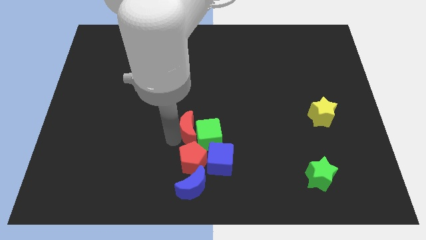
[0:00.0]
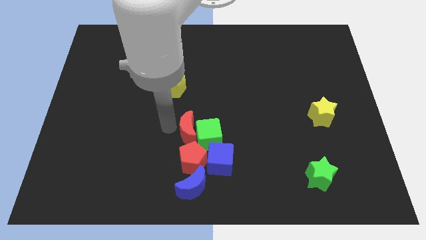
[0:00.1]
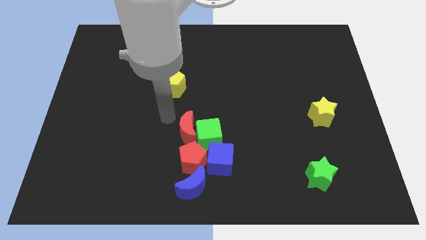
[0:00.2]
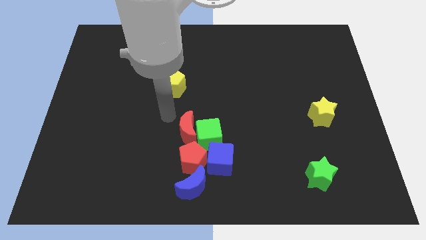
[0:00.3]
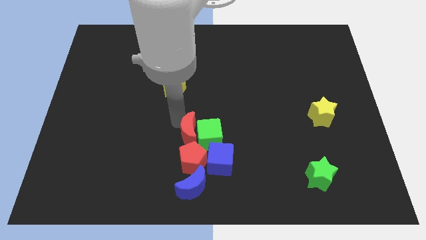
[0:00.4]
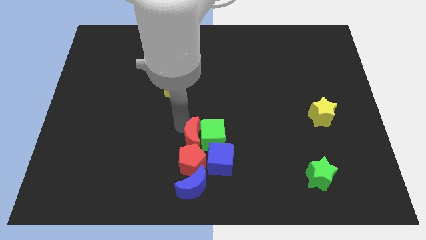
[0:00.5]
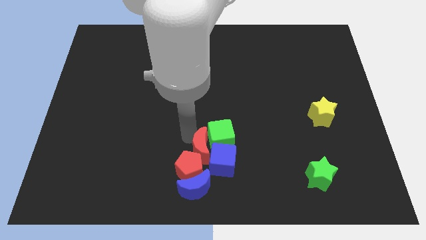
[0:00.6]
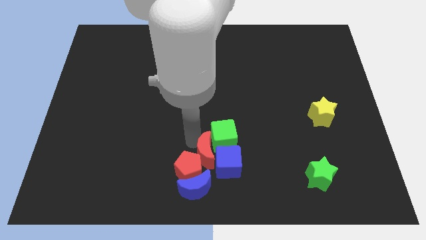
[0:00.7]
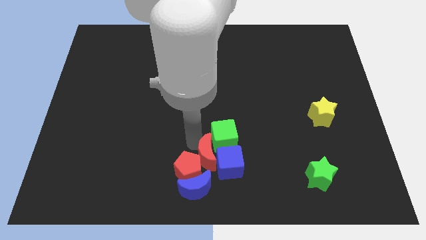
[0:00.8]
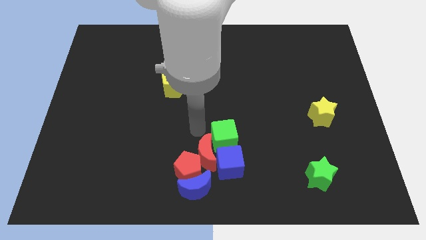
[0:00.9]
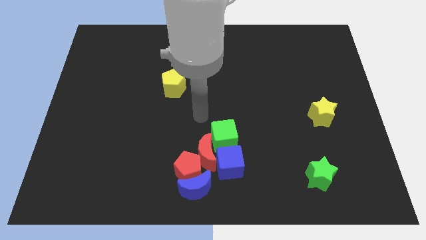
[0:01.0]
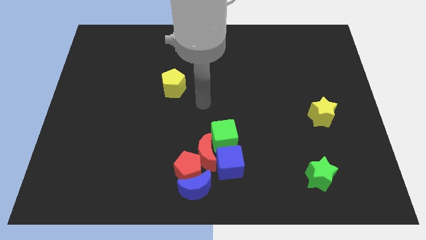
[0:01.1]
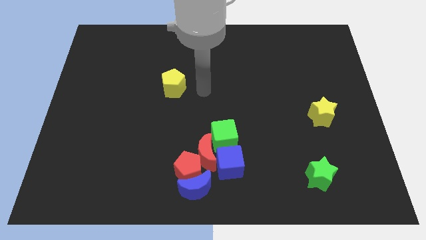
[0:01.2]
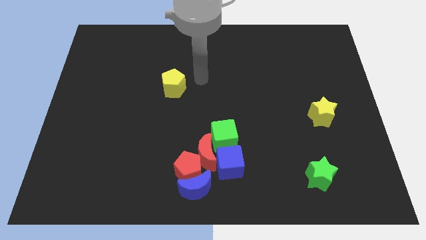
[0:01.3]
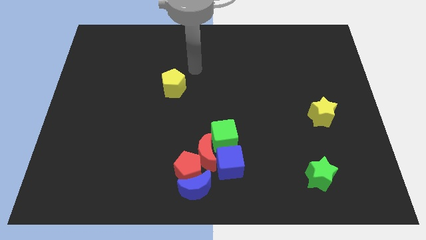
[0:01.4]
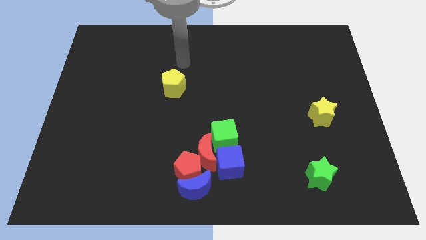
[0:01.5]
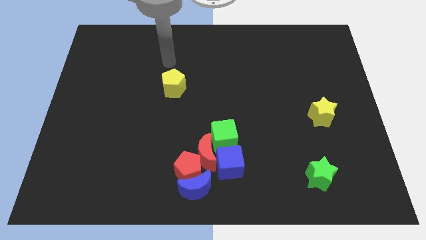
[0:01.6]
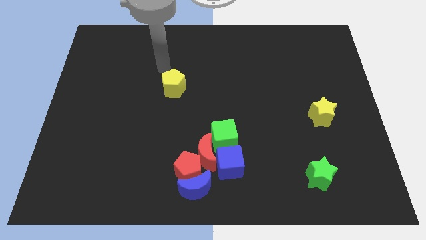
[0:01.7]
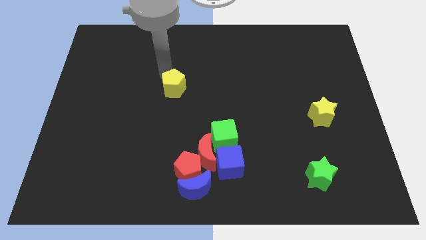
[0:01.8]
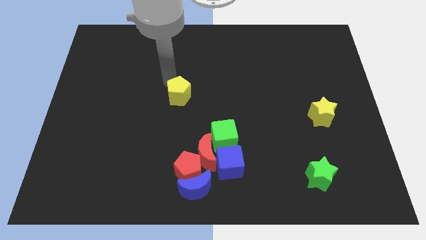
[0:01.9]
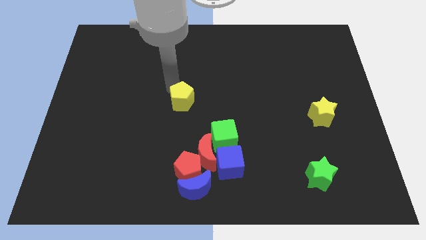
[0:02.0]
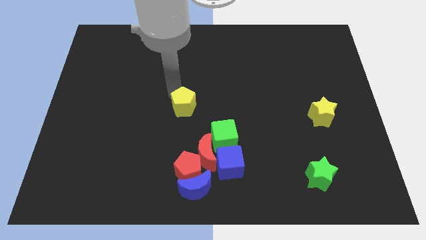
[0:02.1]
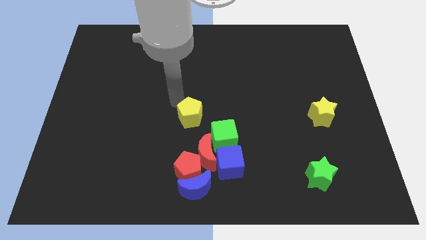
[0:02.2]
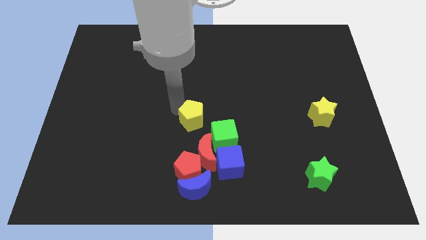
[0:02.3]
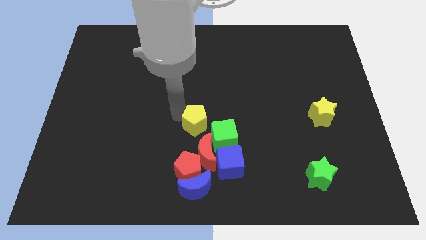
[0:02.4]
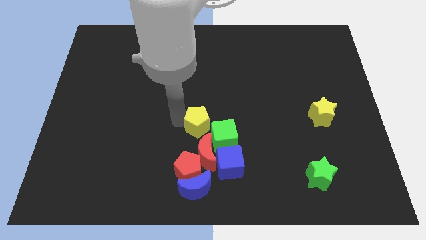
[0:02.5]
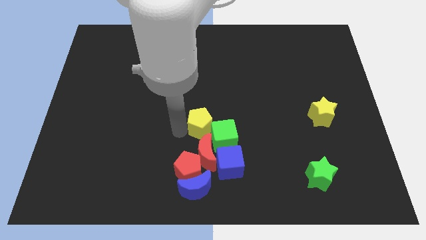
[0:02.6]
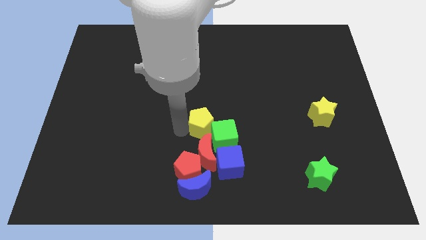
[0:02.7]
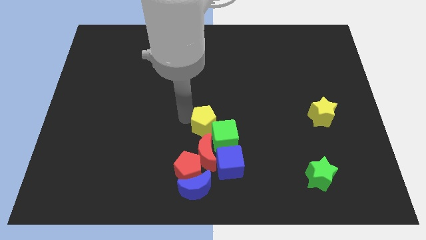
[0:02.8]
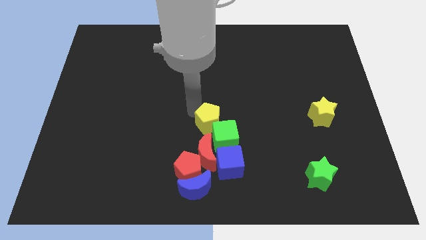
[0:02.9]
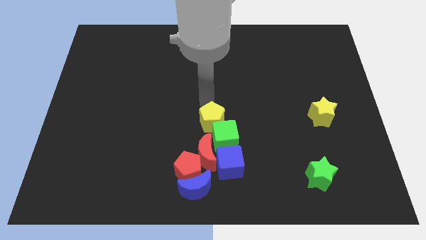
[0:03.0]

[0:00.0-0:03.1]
place yellow pentagon to the top of red moon

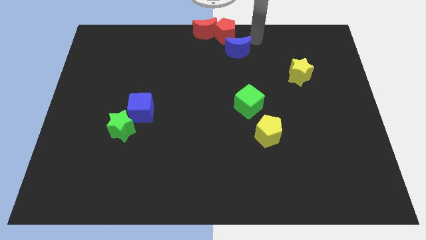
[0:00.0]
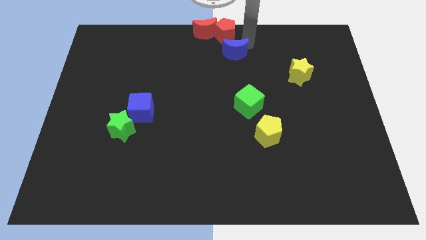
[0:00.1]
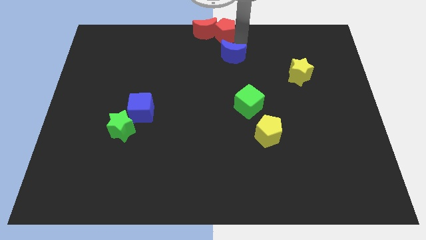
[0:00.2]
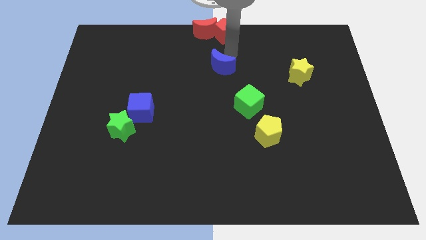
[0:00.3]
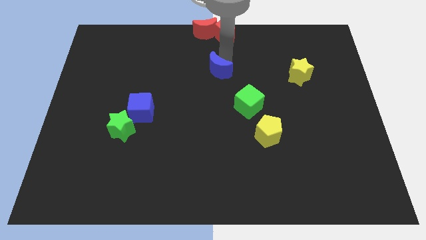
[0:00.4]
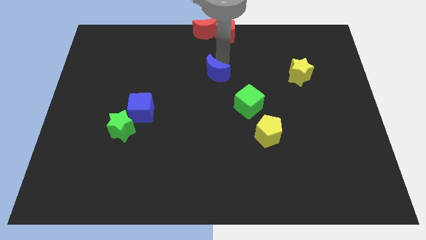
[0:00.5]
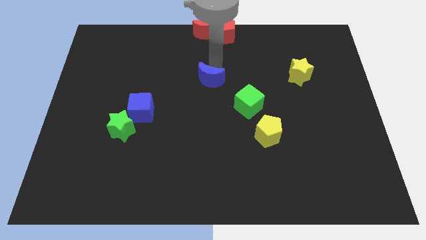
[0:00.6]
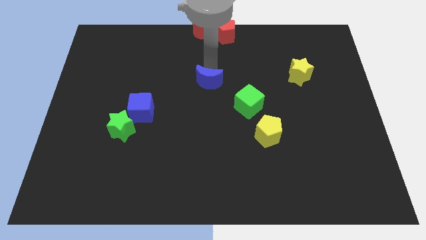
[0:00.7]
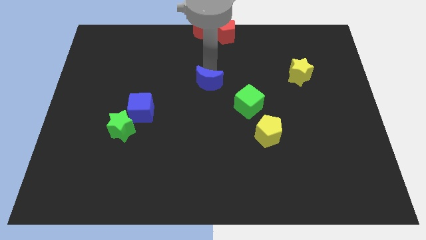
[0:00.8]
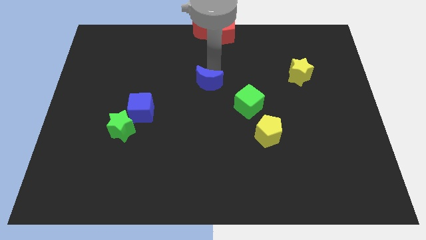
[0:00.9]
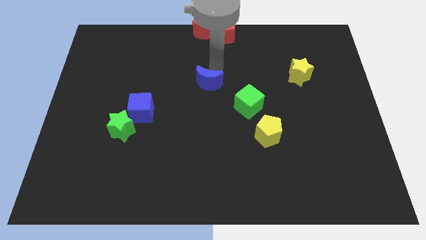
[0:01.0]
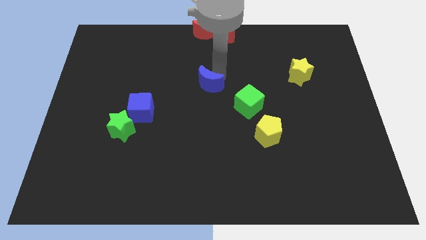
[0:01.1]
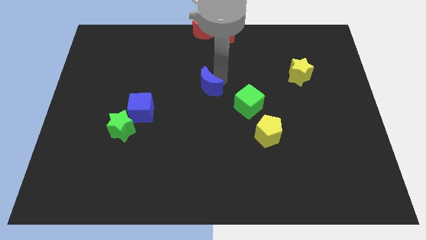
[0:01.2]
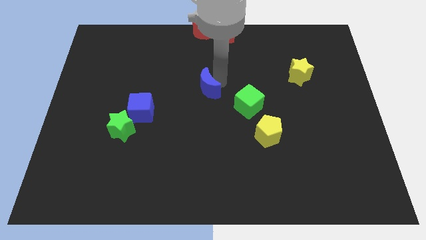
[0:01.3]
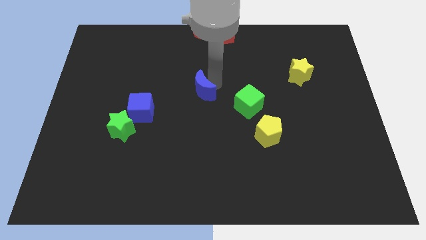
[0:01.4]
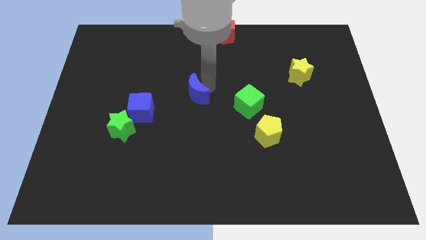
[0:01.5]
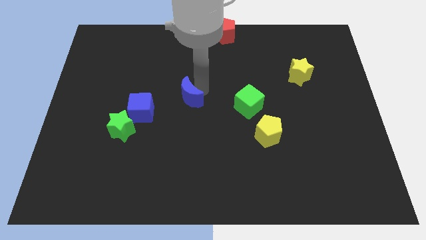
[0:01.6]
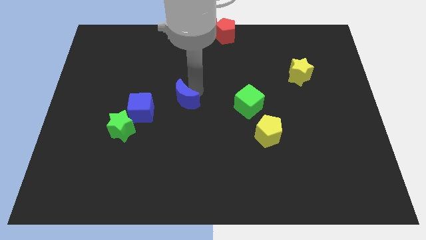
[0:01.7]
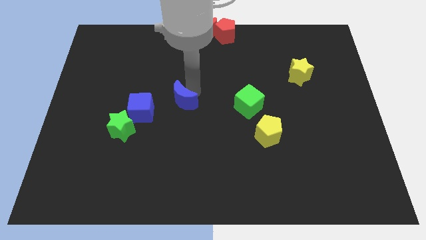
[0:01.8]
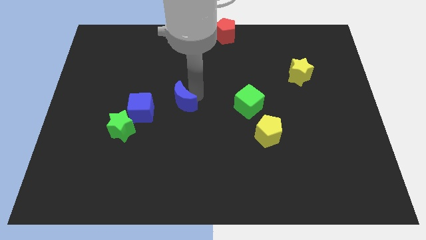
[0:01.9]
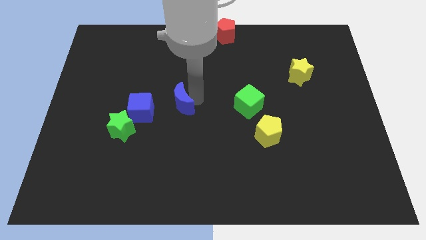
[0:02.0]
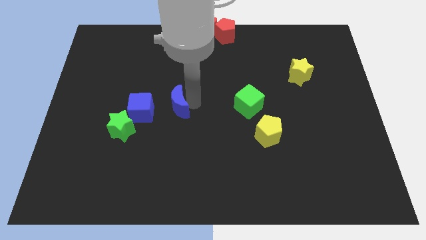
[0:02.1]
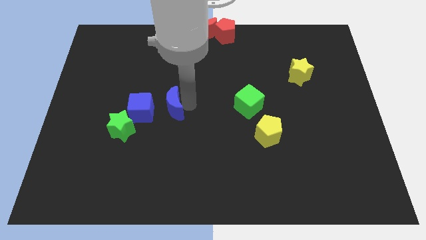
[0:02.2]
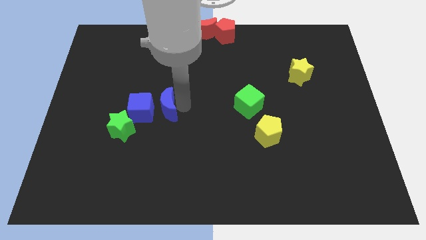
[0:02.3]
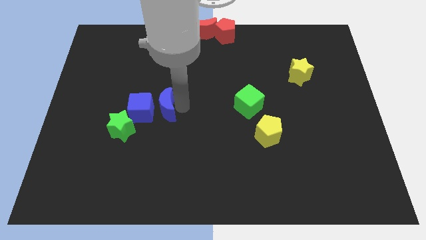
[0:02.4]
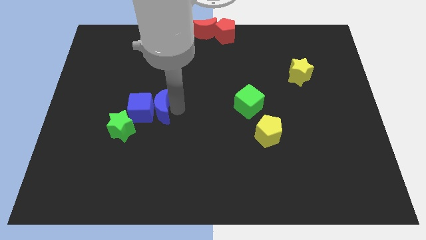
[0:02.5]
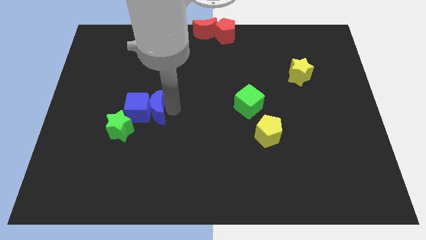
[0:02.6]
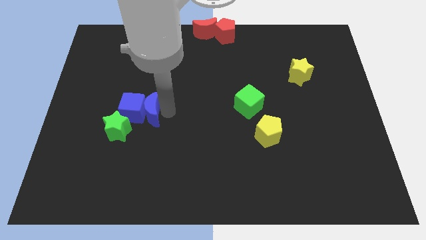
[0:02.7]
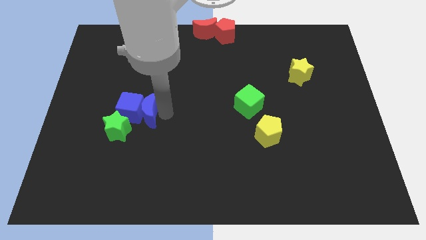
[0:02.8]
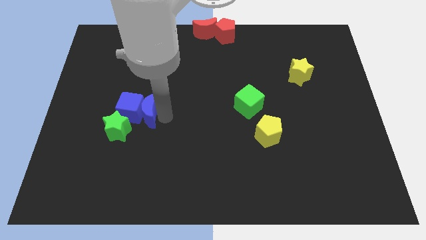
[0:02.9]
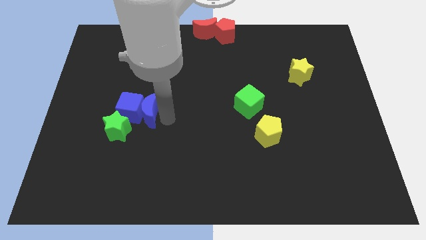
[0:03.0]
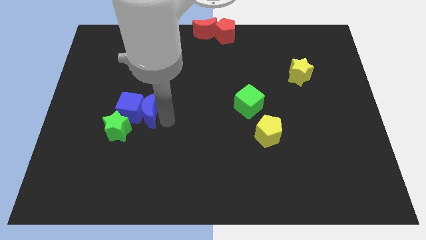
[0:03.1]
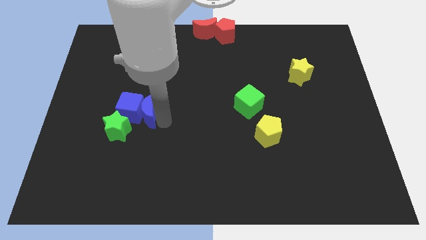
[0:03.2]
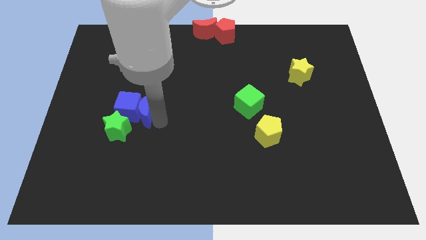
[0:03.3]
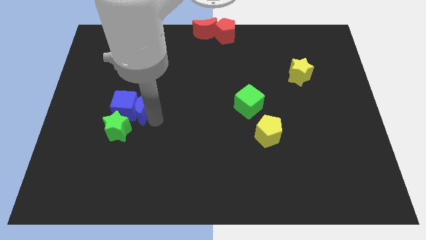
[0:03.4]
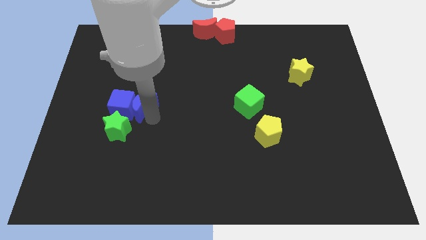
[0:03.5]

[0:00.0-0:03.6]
push the blue moon into blue cube

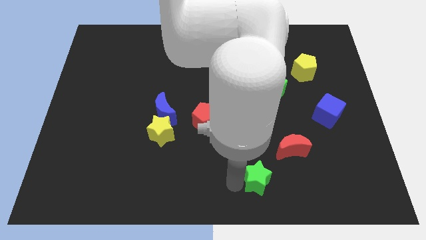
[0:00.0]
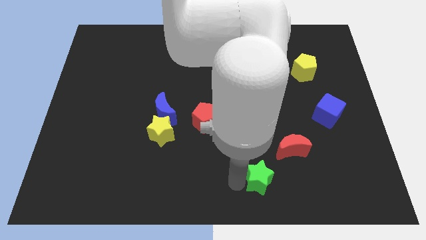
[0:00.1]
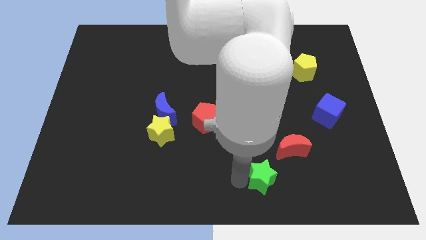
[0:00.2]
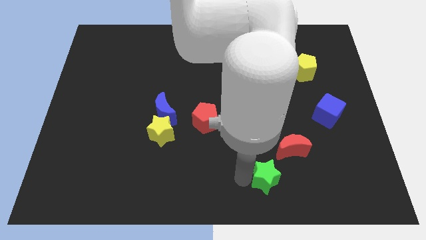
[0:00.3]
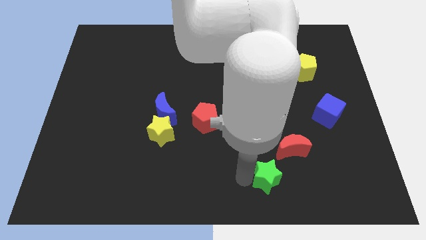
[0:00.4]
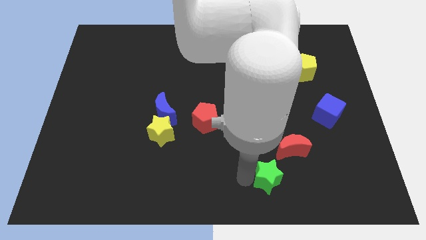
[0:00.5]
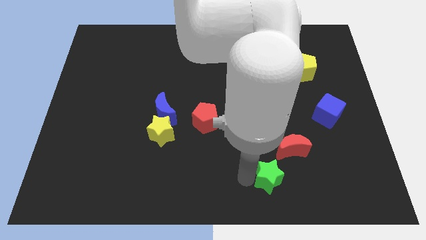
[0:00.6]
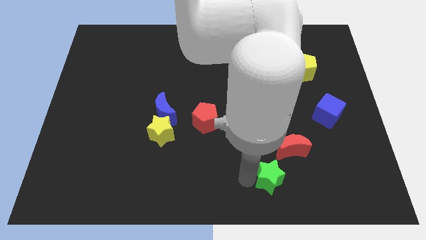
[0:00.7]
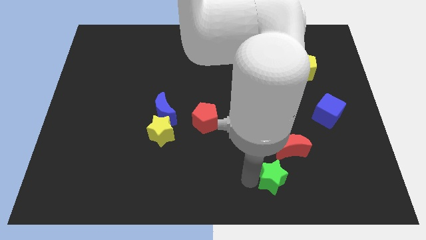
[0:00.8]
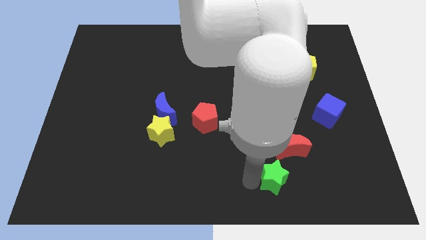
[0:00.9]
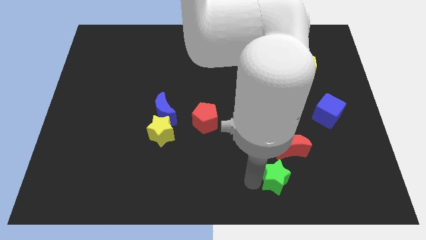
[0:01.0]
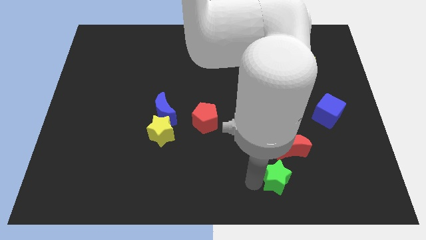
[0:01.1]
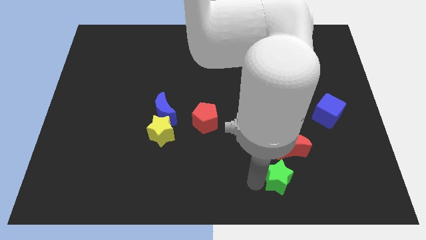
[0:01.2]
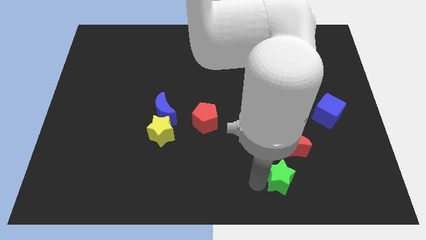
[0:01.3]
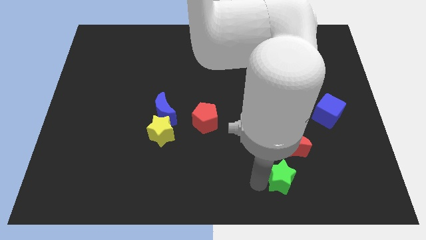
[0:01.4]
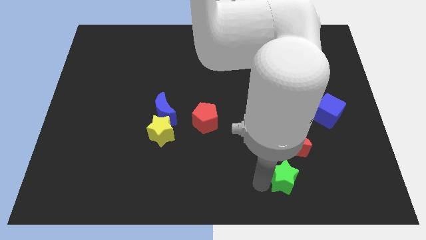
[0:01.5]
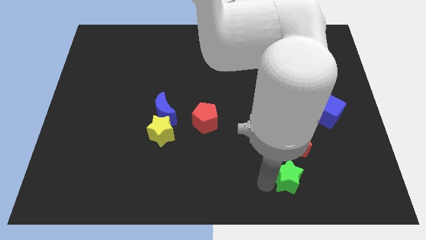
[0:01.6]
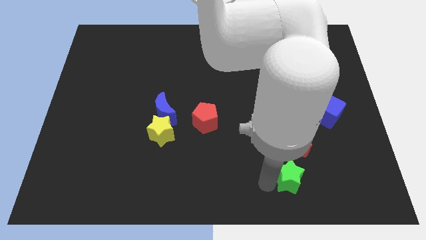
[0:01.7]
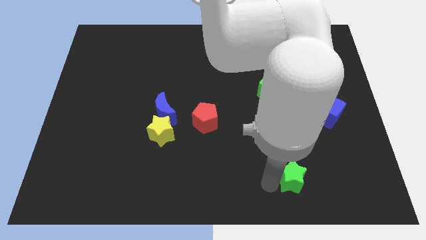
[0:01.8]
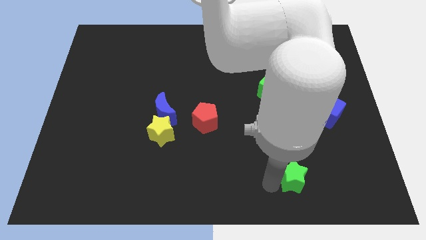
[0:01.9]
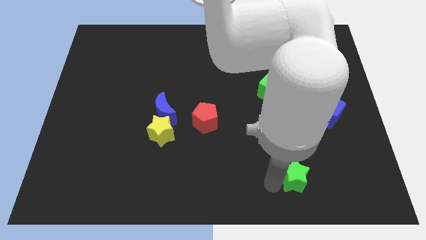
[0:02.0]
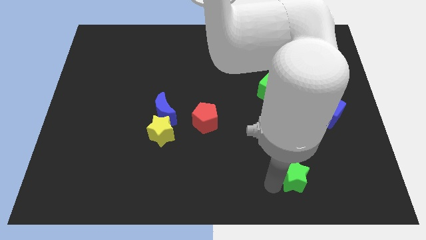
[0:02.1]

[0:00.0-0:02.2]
place green star below the red moon
